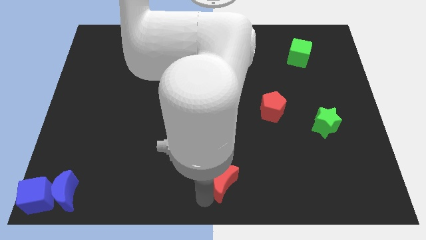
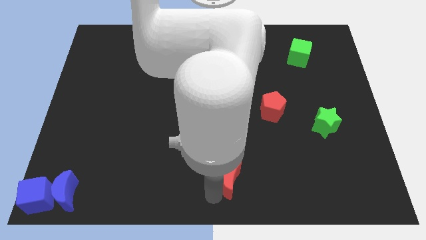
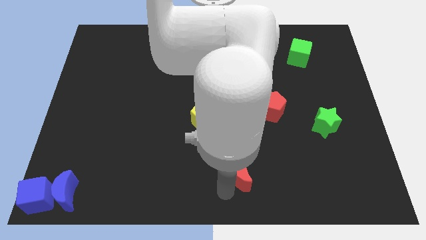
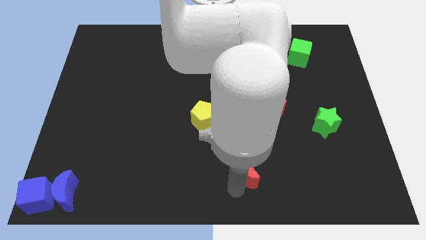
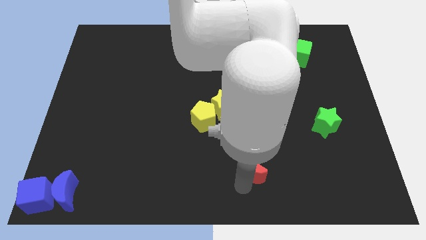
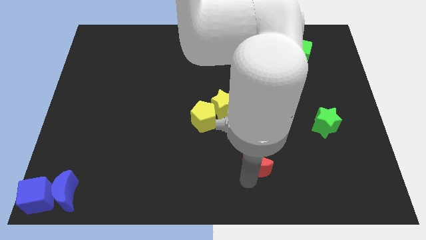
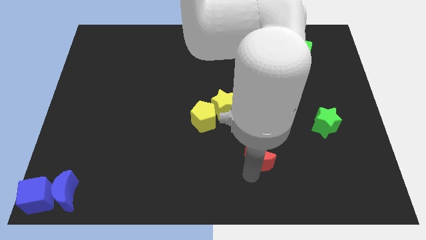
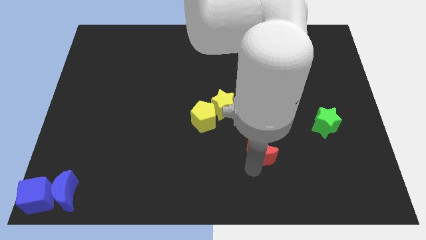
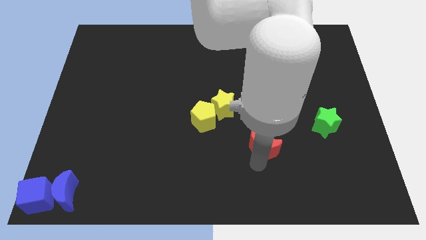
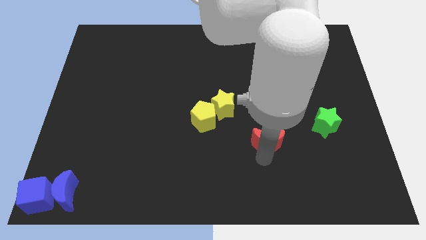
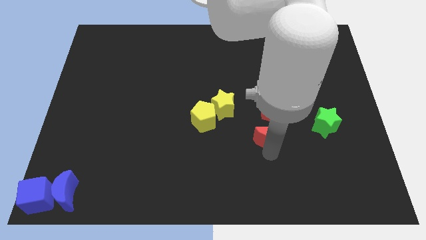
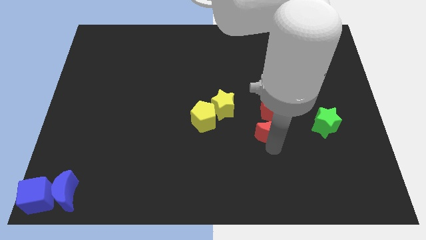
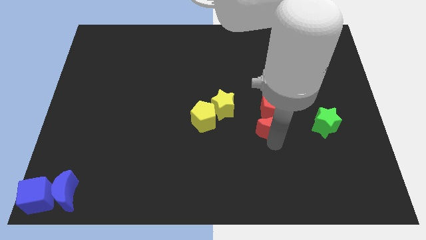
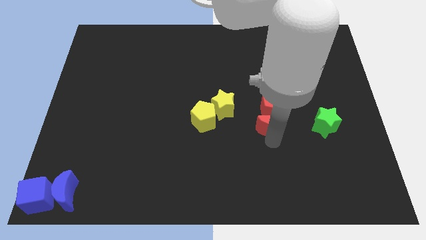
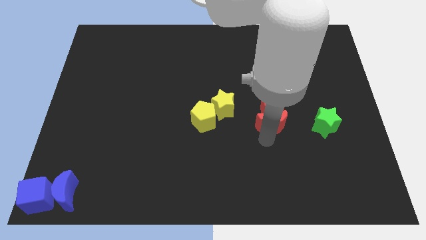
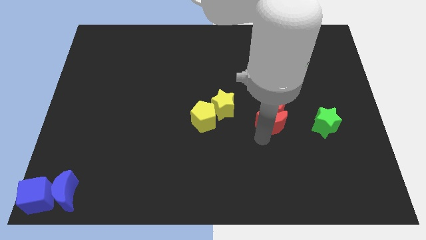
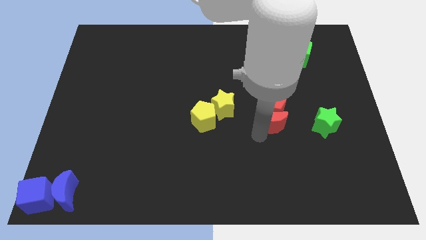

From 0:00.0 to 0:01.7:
place the red moon below to the red pentagon

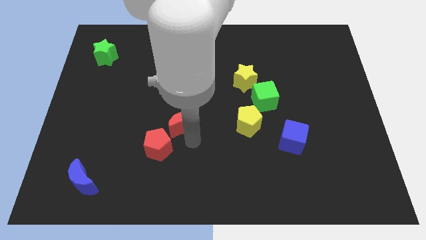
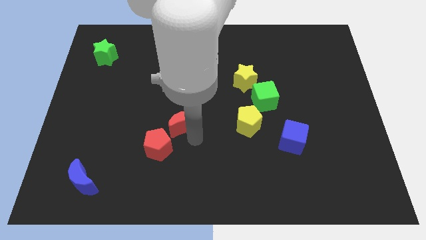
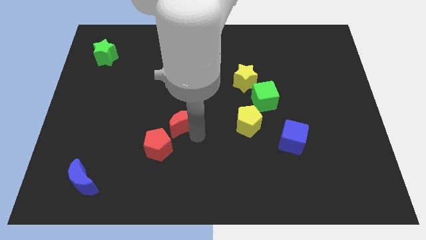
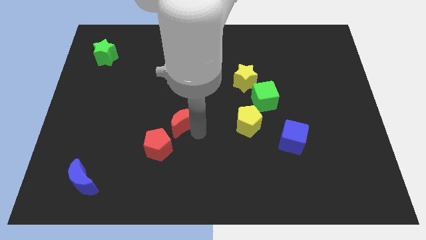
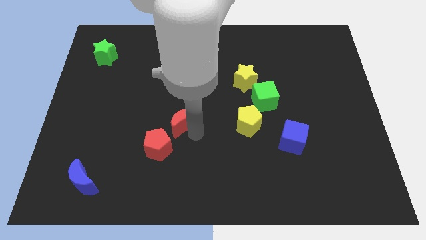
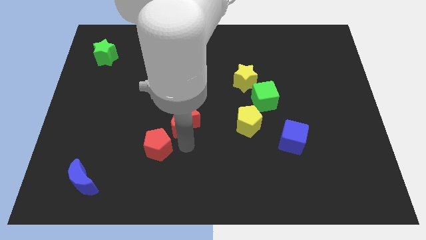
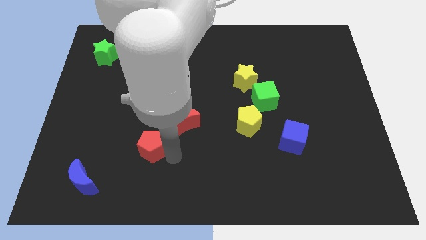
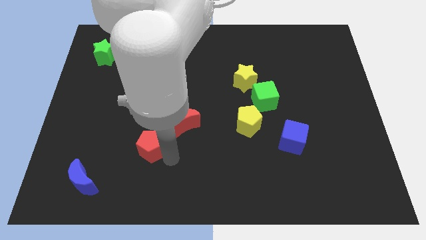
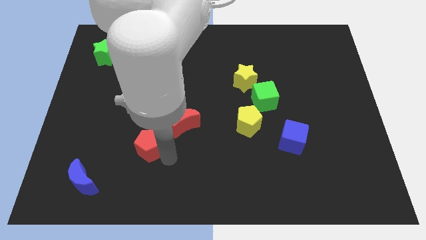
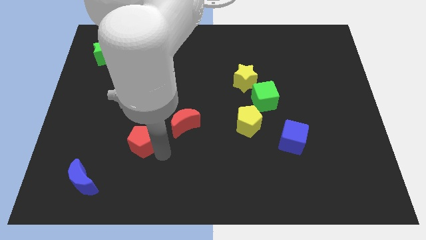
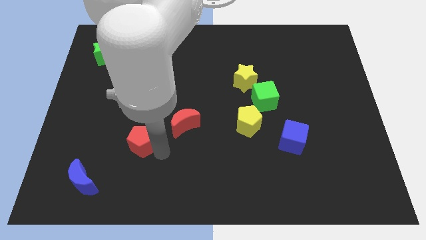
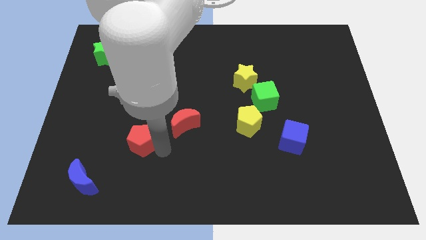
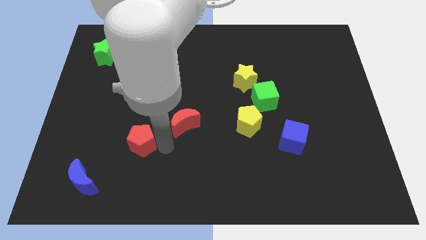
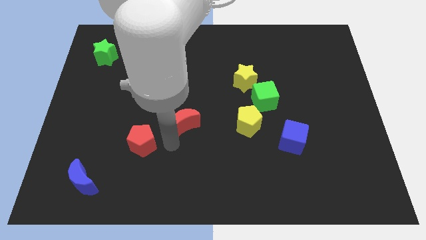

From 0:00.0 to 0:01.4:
separate red pentagon from red moon

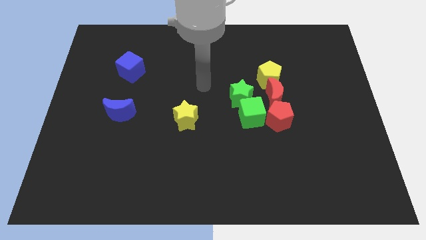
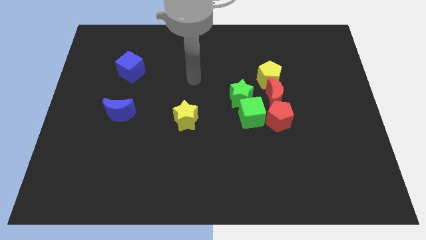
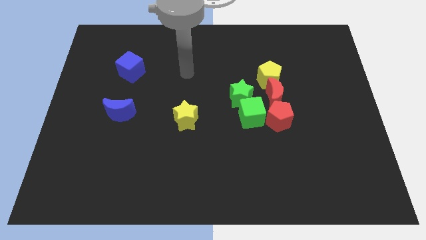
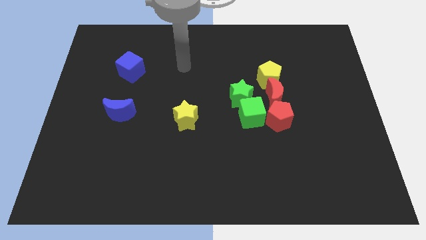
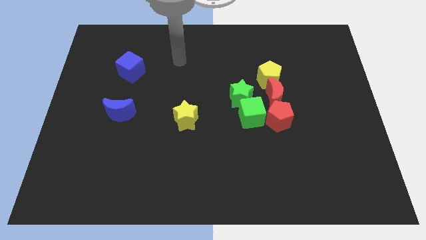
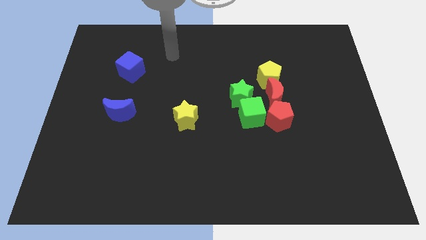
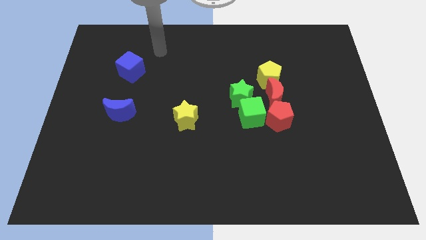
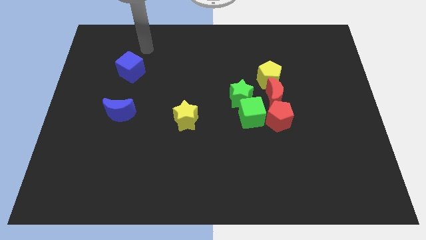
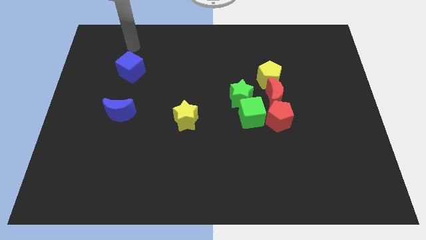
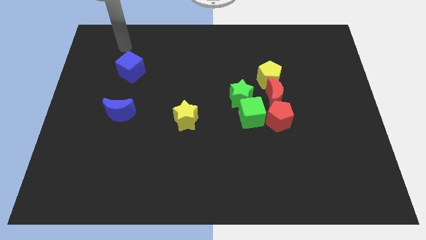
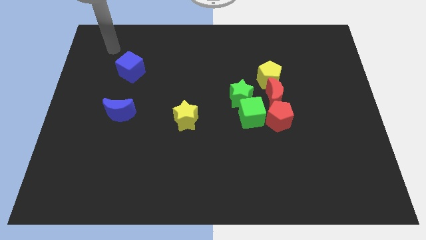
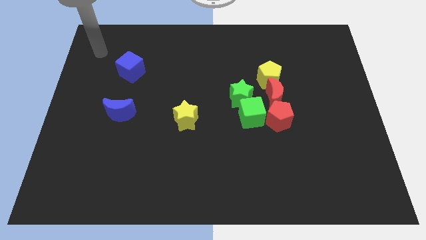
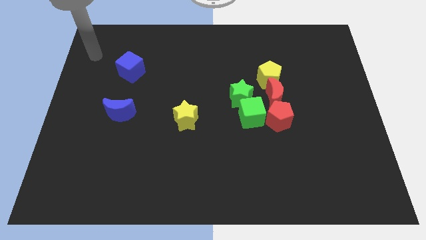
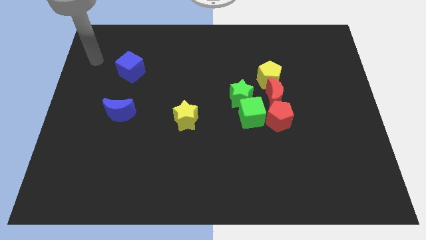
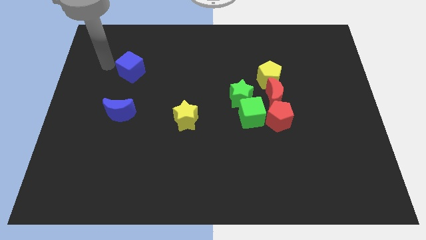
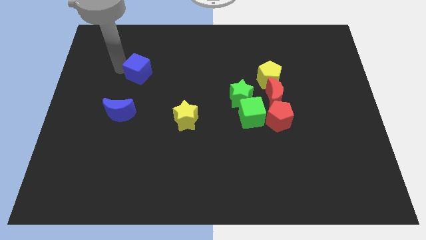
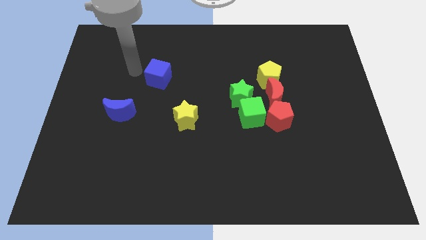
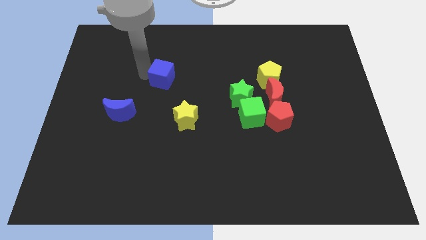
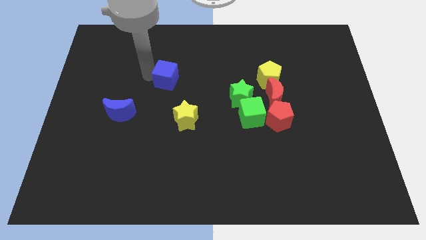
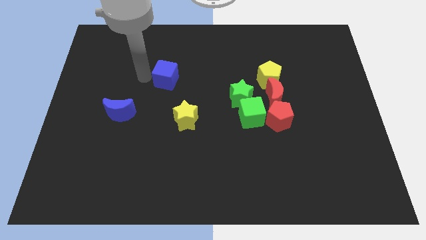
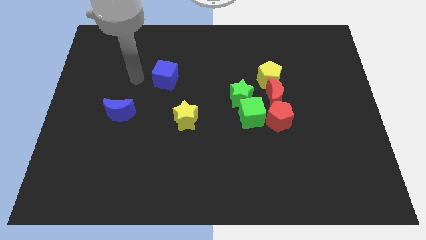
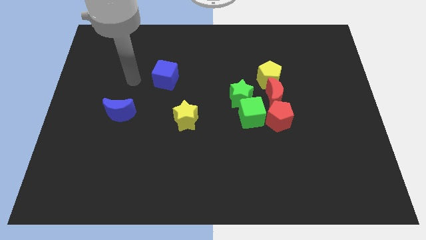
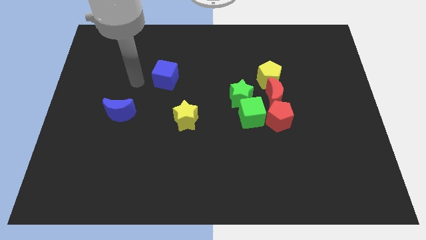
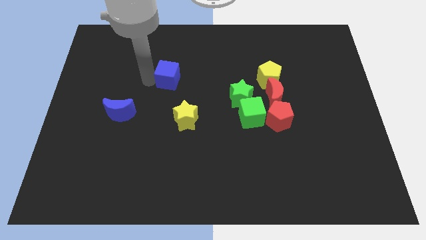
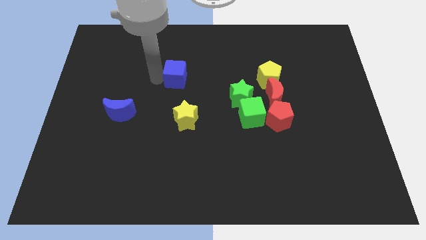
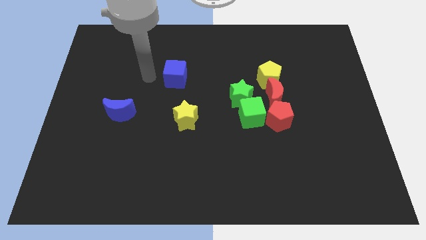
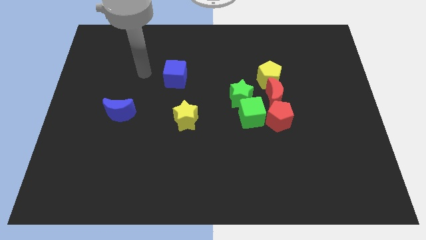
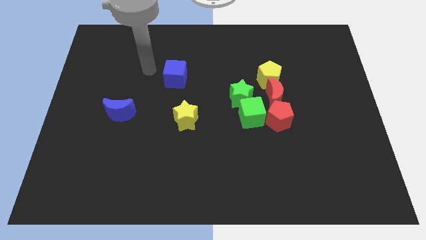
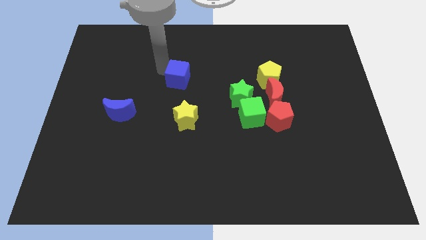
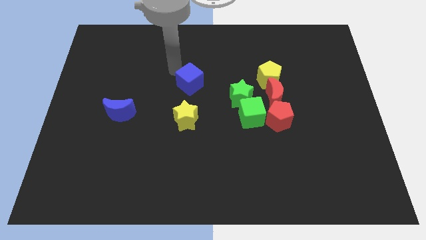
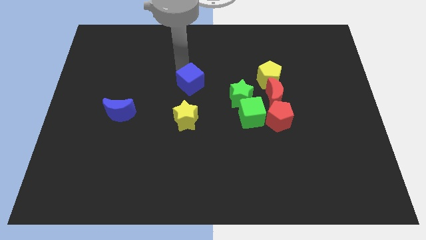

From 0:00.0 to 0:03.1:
move the blue cube to the top of the yellow star

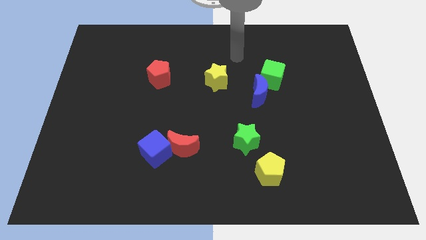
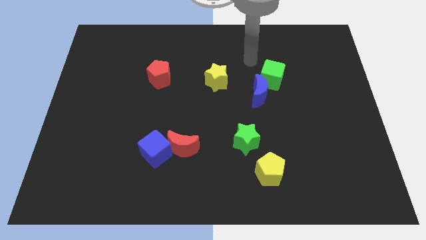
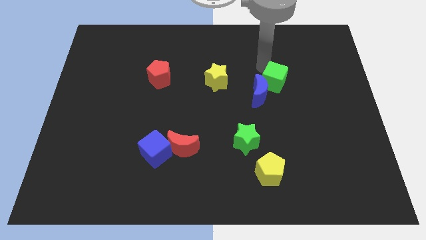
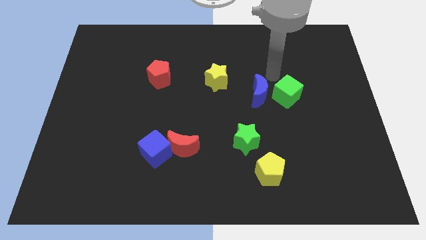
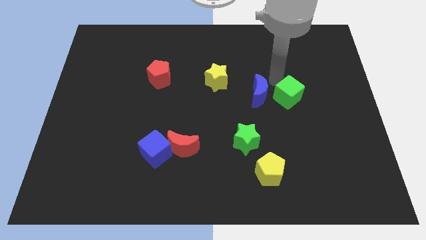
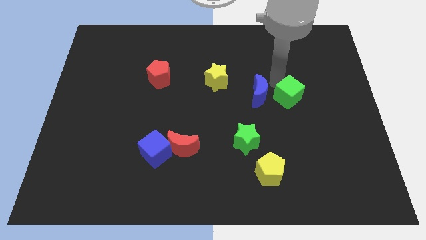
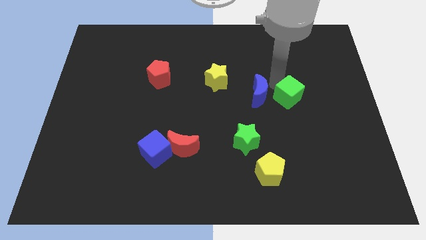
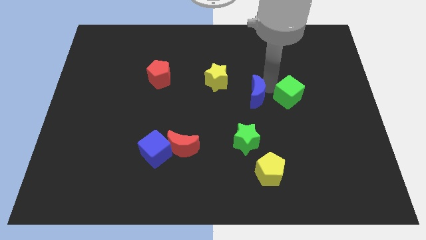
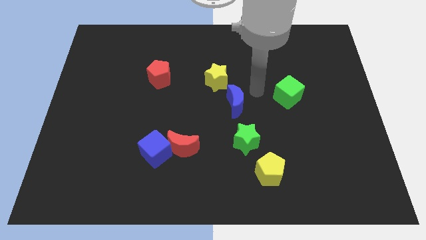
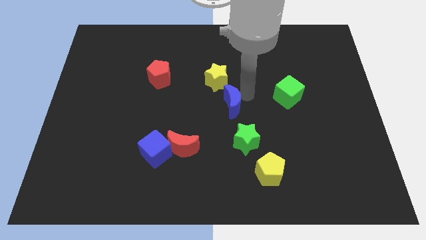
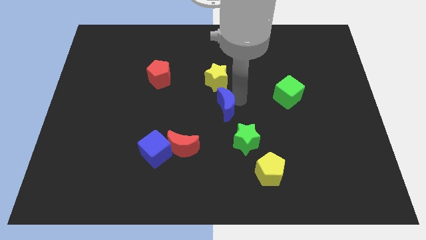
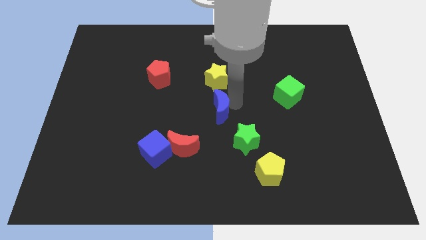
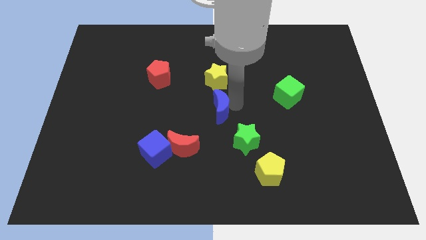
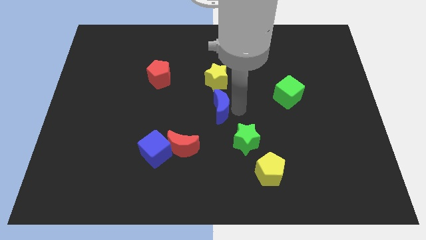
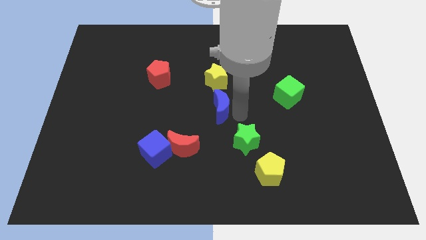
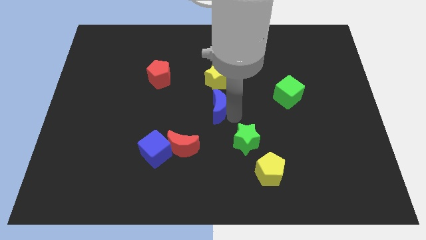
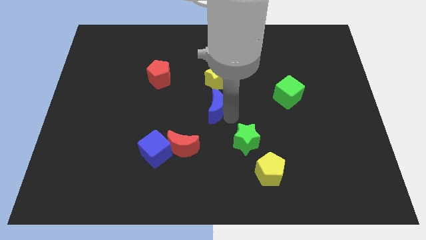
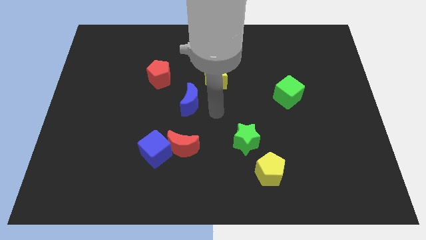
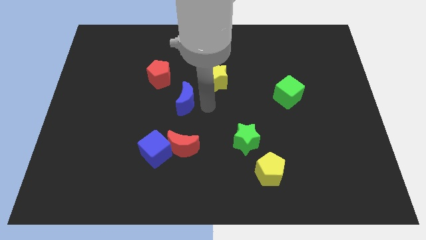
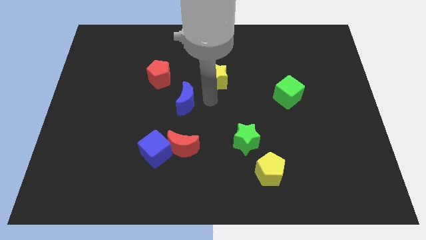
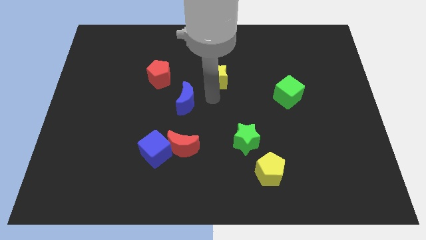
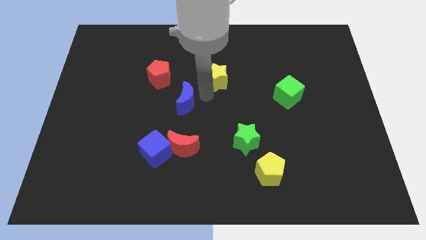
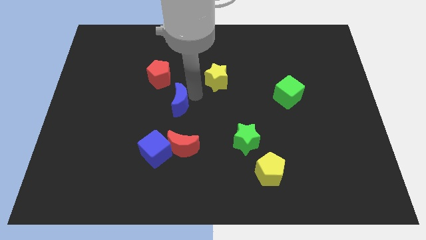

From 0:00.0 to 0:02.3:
place the blue moon diagonally to the red pentagon

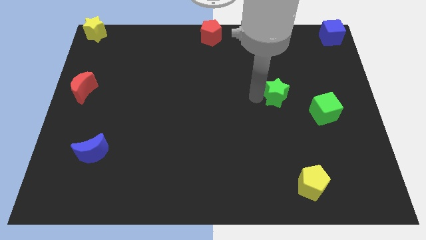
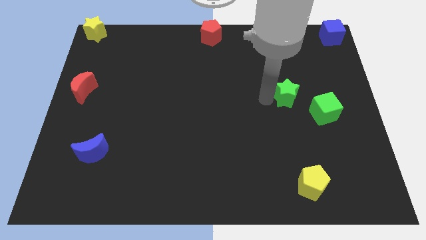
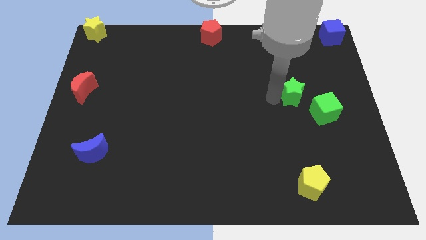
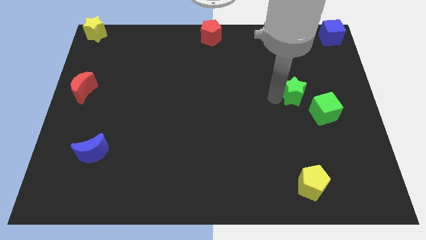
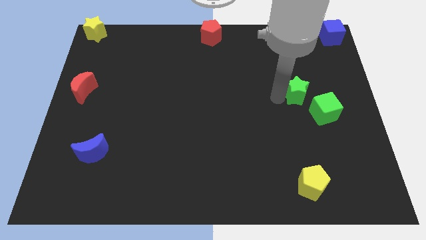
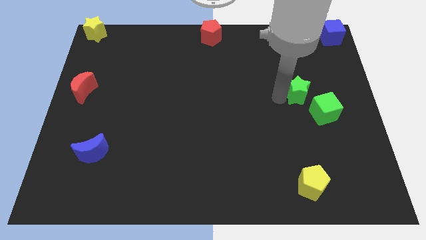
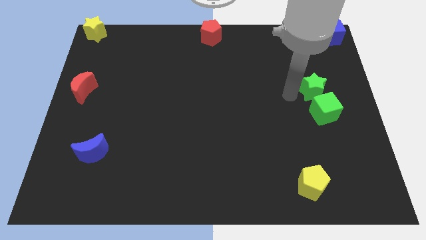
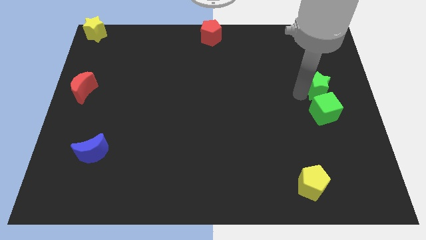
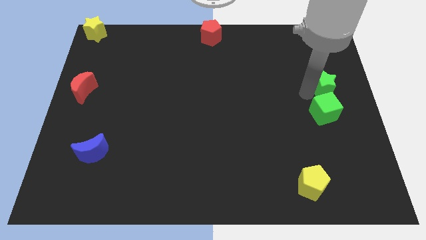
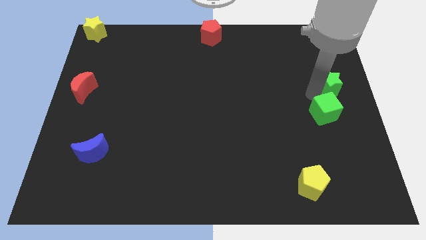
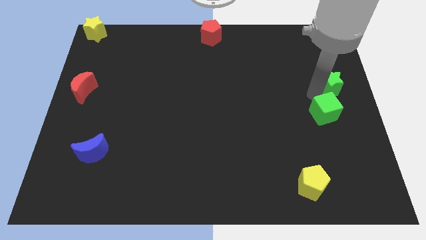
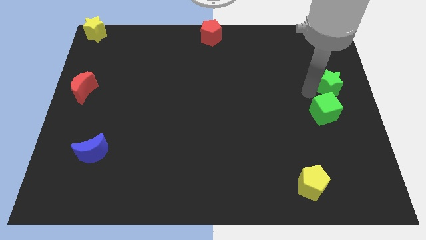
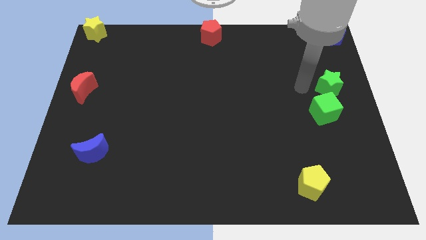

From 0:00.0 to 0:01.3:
push the green star to the top of the green cube
